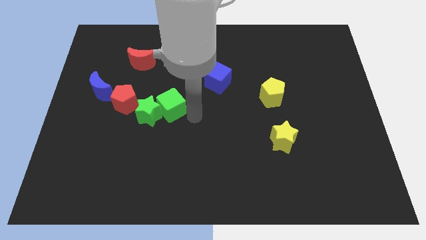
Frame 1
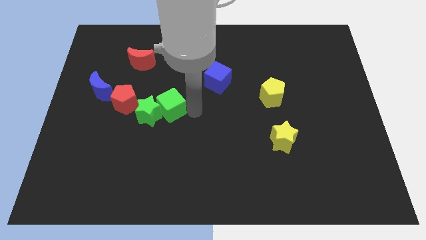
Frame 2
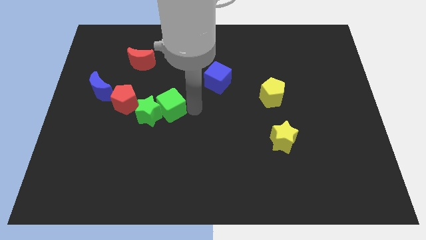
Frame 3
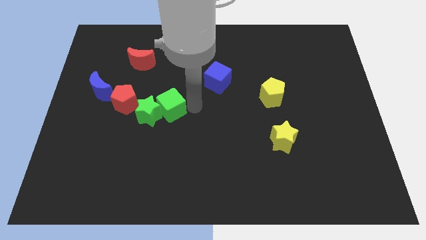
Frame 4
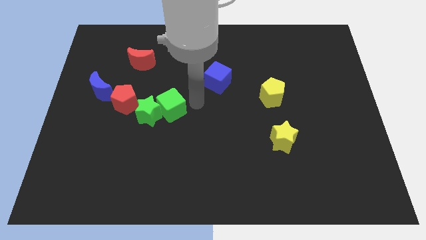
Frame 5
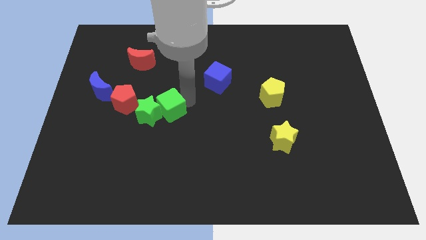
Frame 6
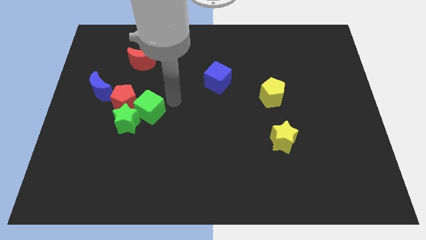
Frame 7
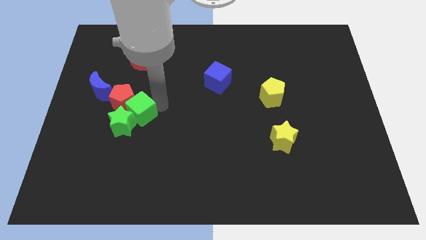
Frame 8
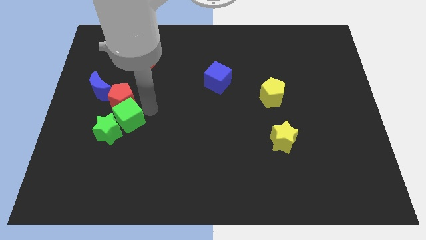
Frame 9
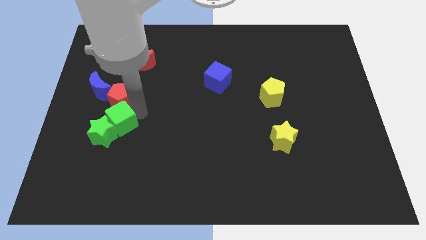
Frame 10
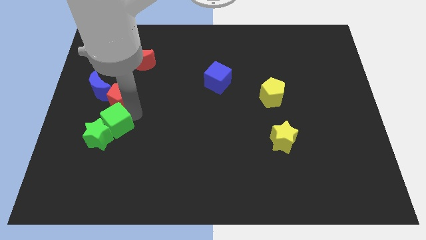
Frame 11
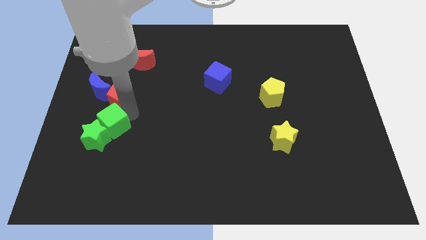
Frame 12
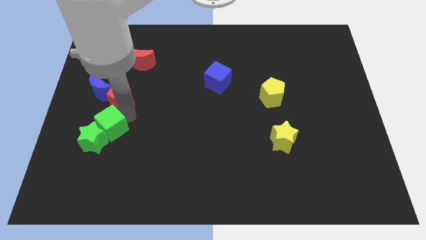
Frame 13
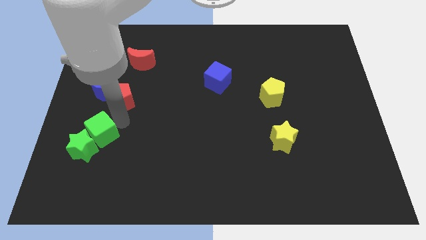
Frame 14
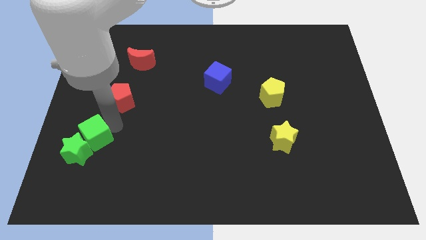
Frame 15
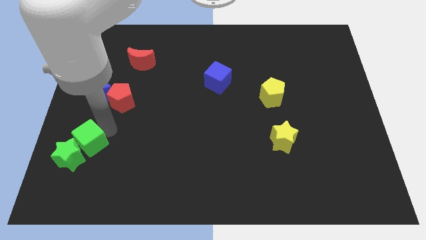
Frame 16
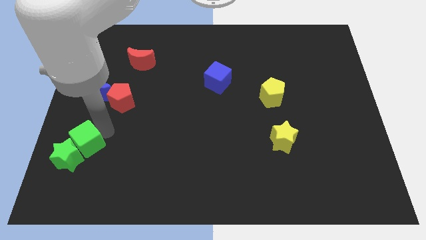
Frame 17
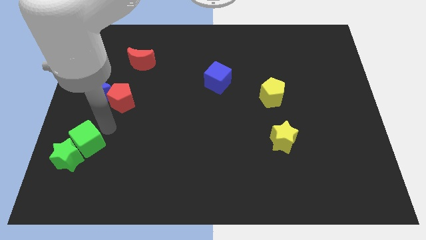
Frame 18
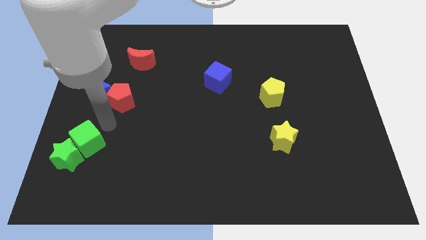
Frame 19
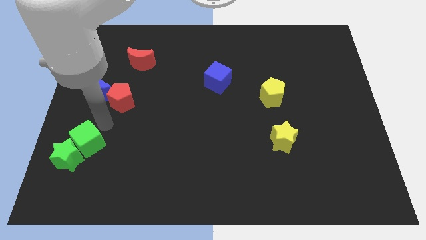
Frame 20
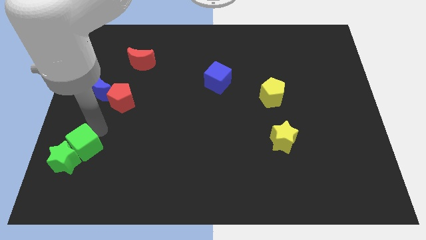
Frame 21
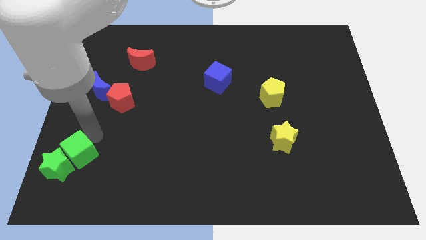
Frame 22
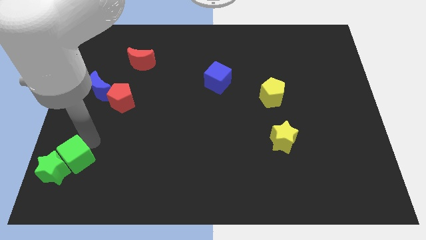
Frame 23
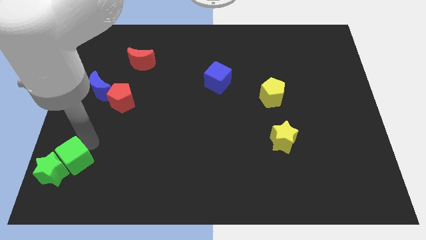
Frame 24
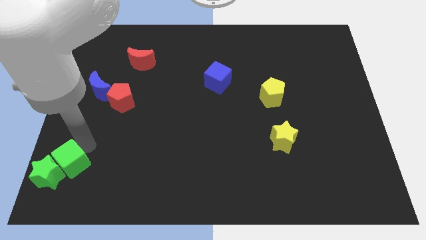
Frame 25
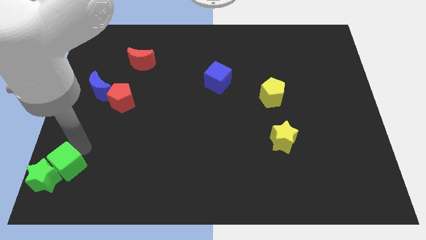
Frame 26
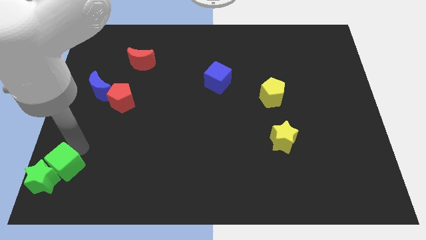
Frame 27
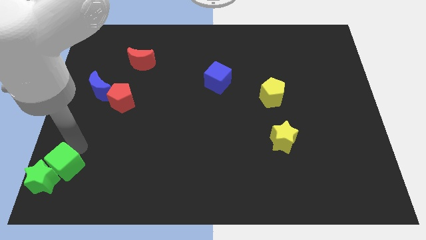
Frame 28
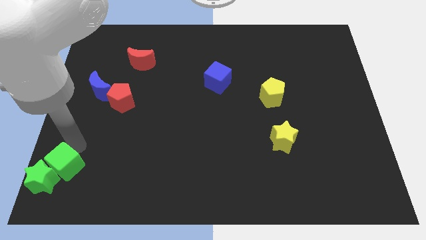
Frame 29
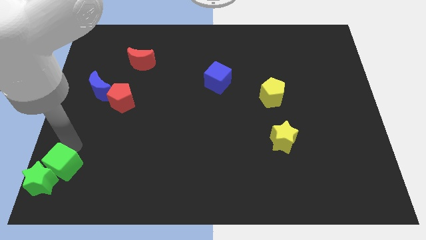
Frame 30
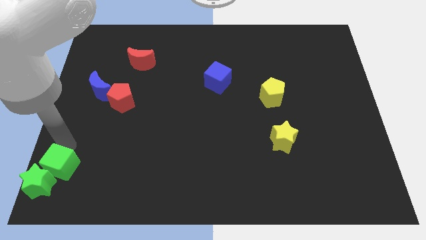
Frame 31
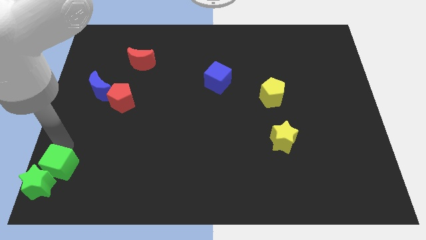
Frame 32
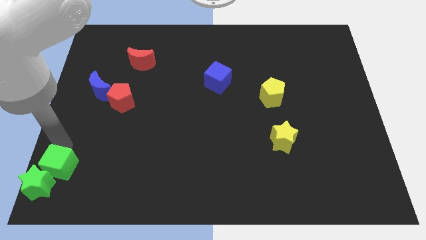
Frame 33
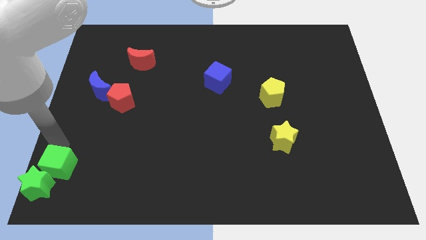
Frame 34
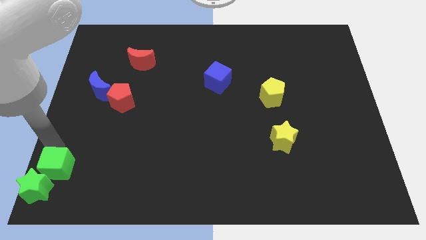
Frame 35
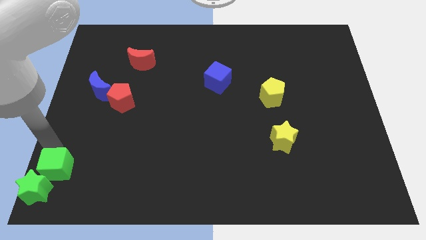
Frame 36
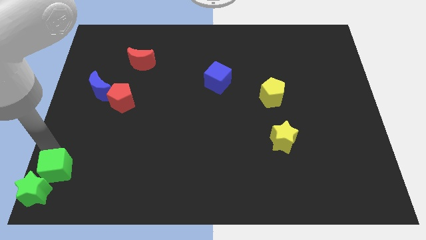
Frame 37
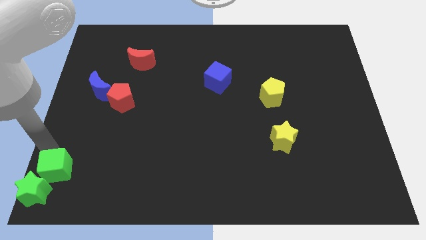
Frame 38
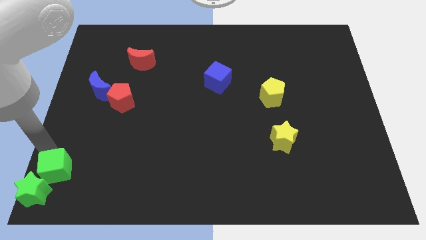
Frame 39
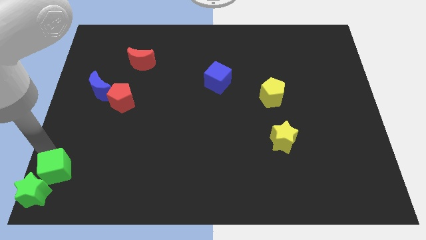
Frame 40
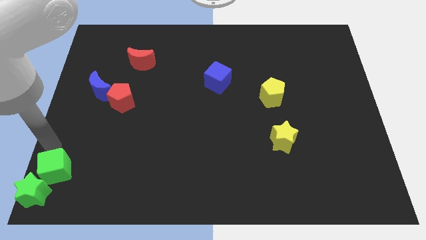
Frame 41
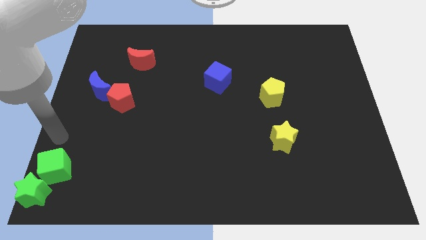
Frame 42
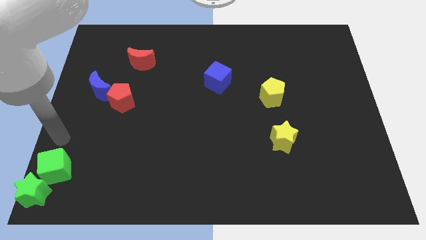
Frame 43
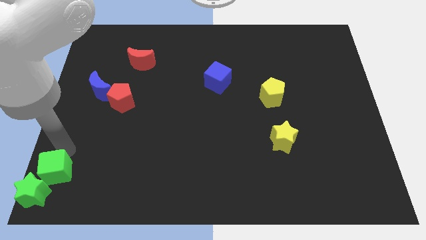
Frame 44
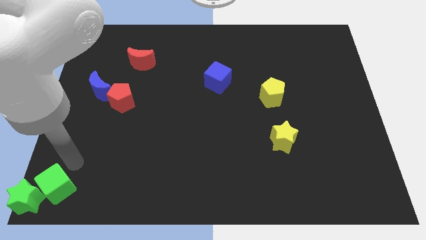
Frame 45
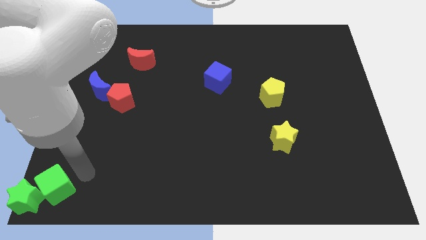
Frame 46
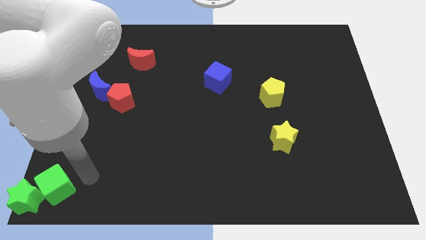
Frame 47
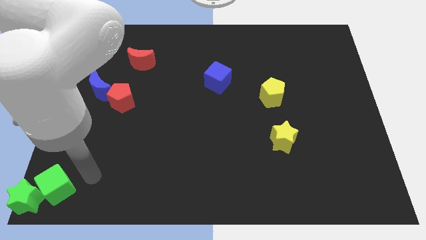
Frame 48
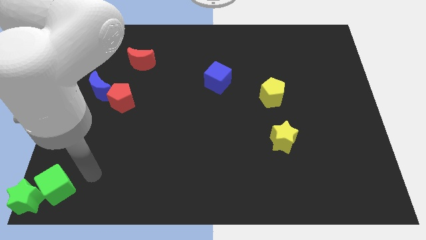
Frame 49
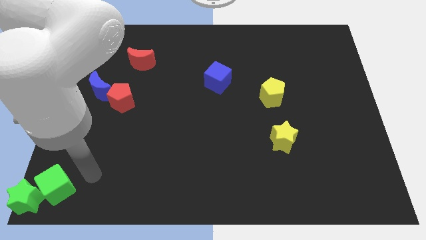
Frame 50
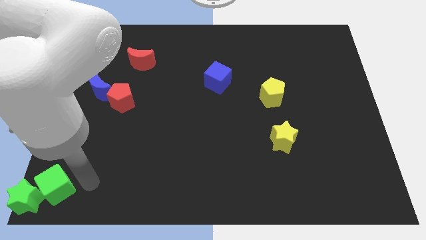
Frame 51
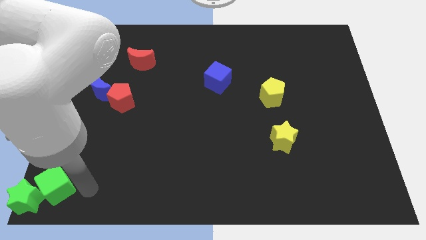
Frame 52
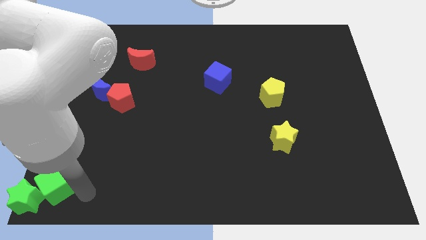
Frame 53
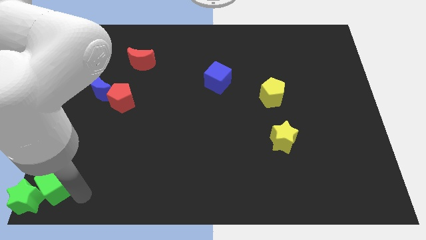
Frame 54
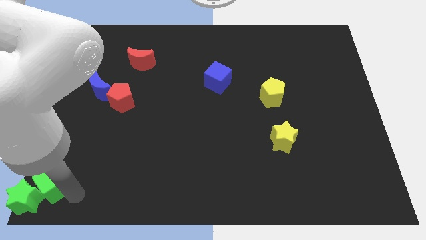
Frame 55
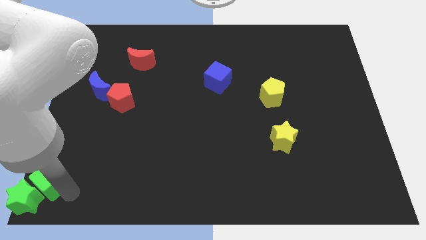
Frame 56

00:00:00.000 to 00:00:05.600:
push the green cube and green star to the bottom left corner of the board

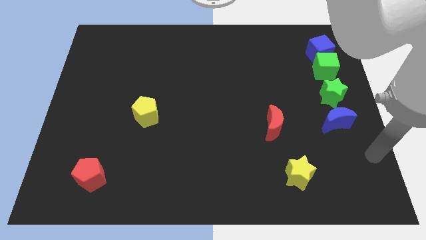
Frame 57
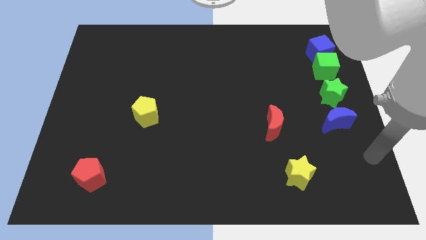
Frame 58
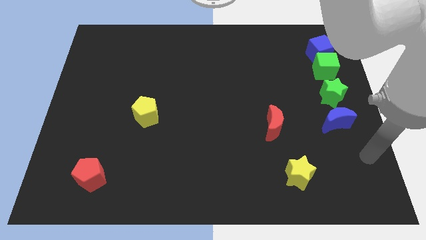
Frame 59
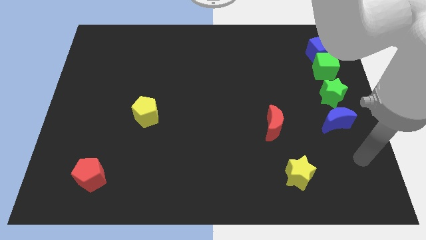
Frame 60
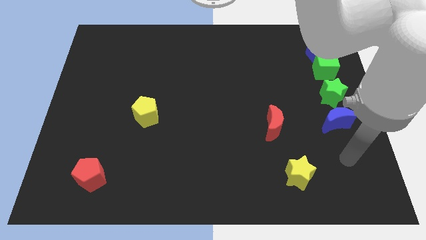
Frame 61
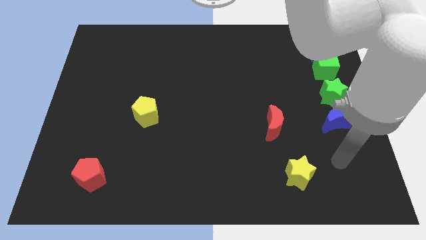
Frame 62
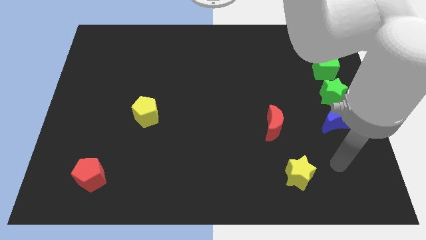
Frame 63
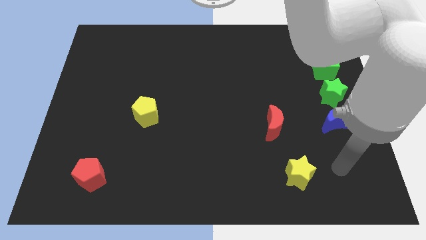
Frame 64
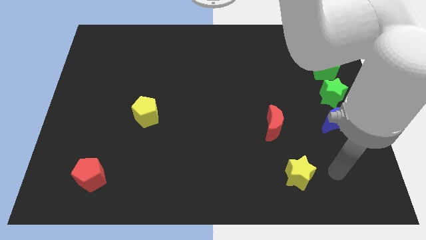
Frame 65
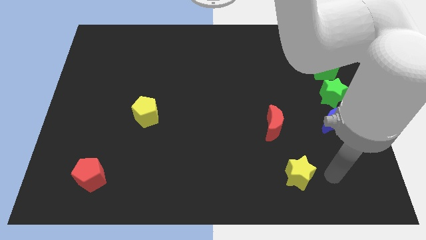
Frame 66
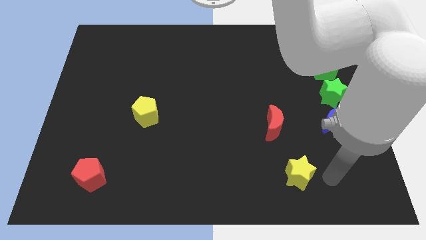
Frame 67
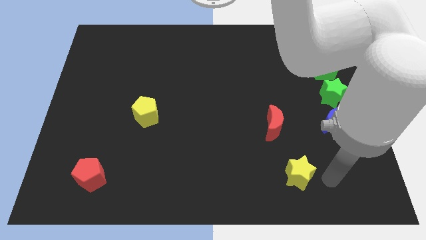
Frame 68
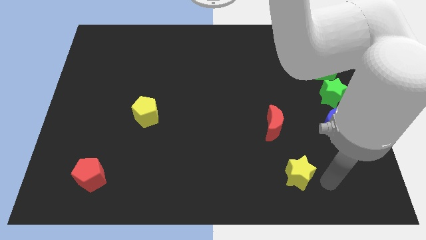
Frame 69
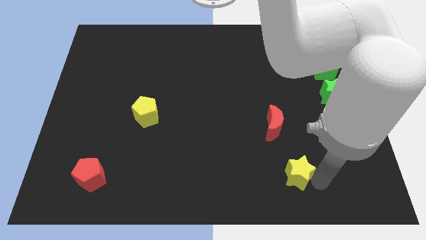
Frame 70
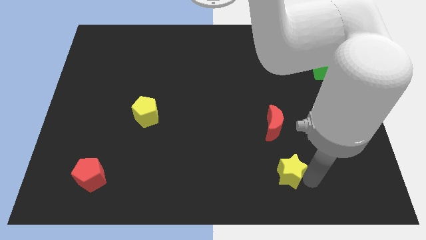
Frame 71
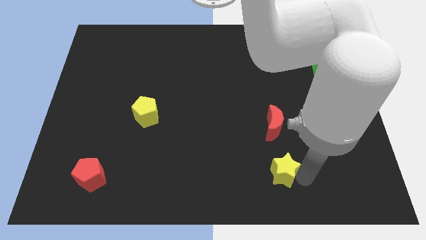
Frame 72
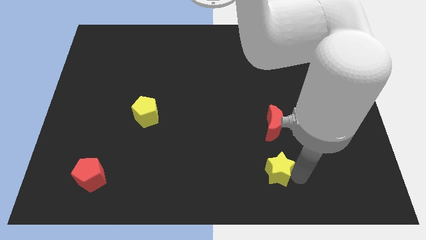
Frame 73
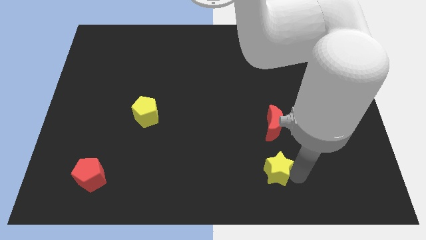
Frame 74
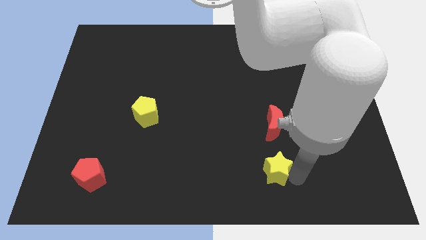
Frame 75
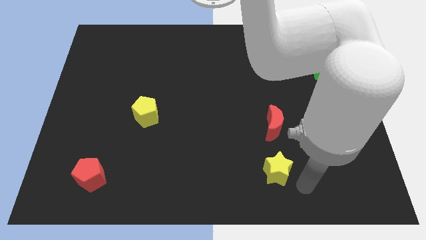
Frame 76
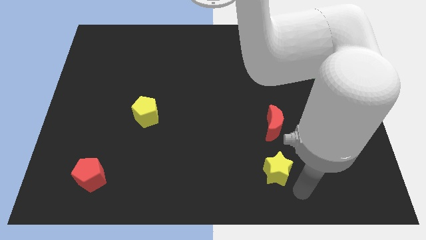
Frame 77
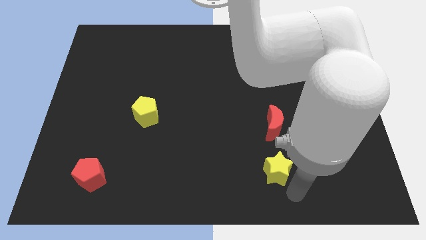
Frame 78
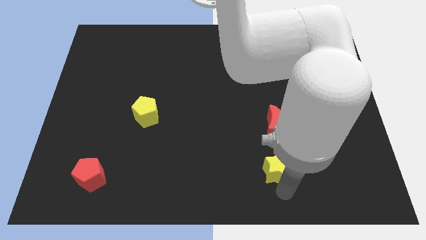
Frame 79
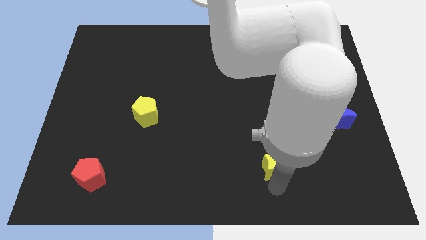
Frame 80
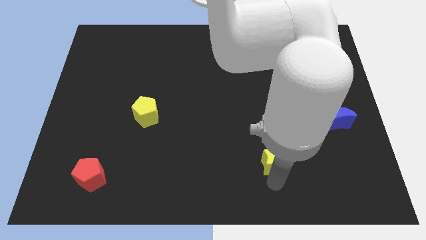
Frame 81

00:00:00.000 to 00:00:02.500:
place your arm below yellow star

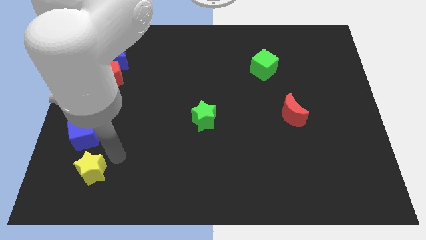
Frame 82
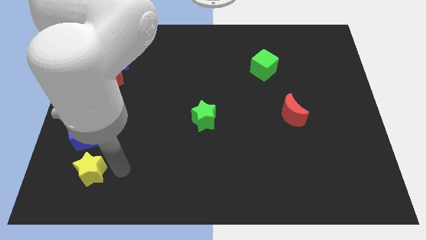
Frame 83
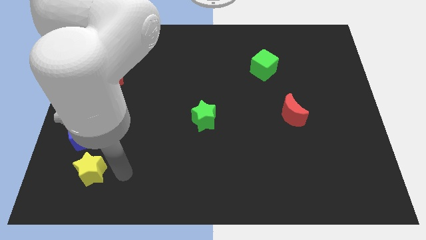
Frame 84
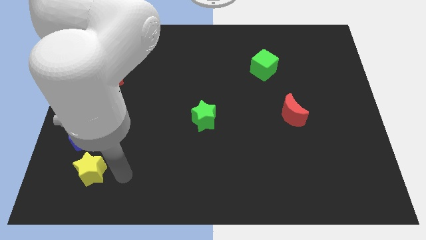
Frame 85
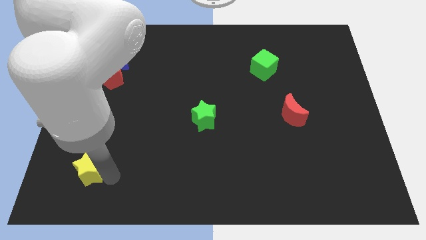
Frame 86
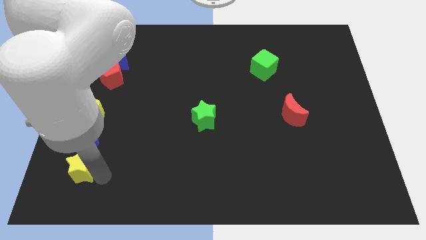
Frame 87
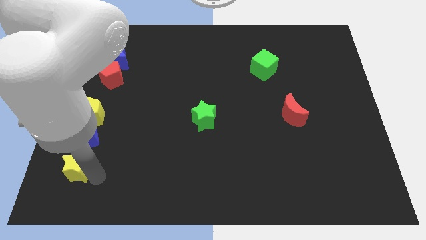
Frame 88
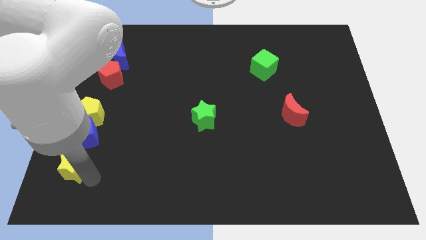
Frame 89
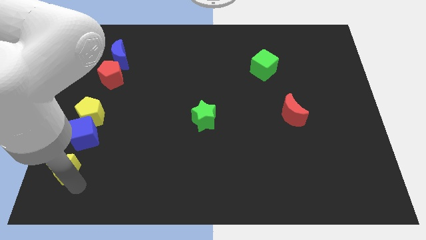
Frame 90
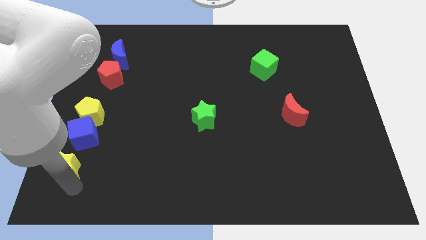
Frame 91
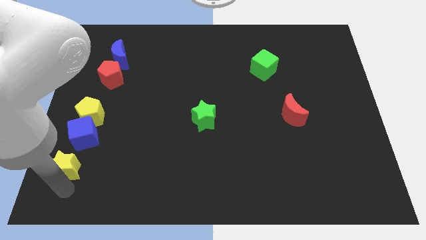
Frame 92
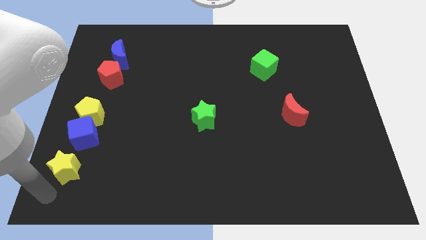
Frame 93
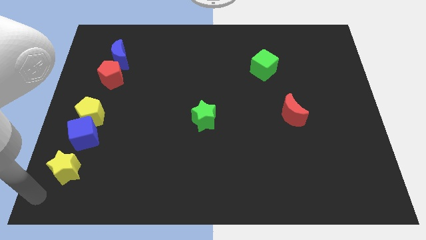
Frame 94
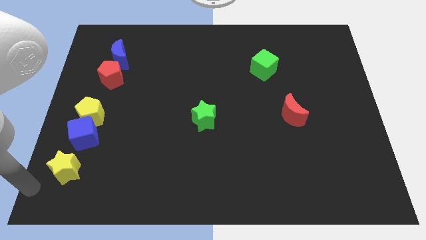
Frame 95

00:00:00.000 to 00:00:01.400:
slide the yellow star diagonally bottom left to the blue cube
